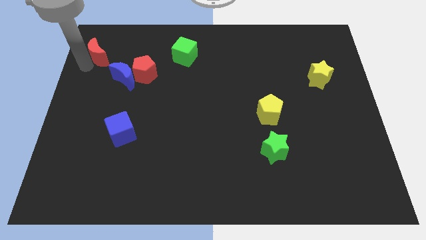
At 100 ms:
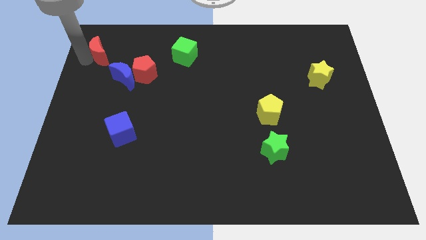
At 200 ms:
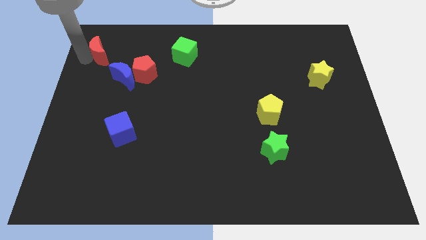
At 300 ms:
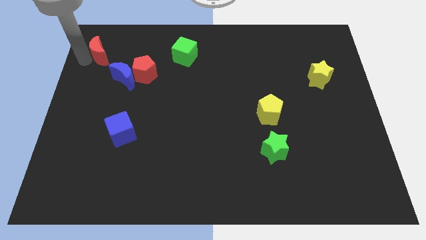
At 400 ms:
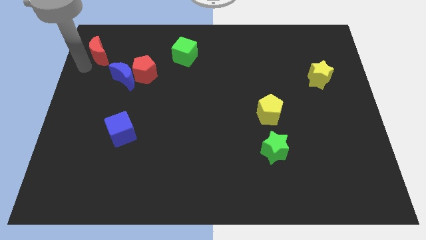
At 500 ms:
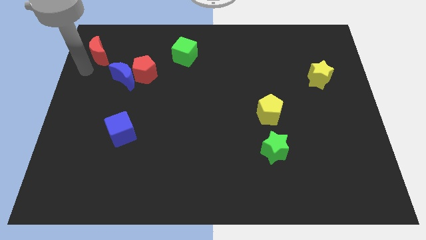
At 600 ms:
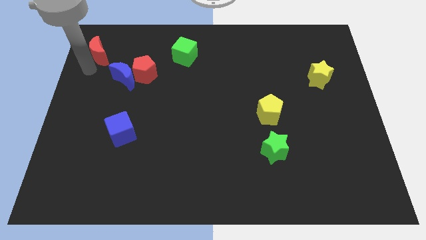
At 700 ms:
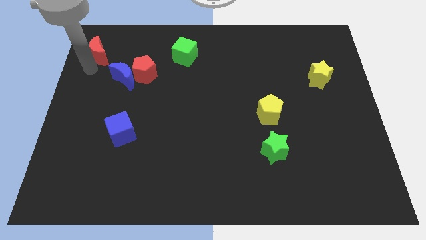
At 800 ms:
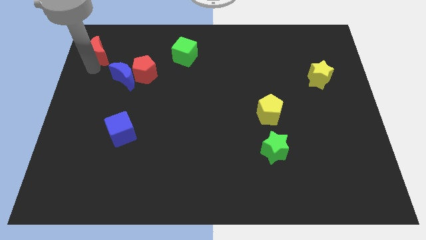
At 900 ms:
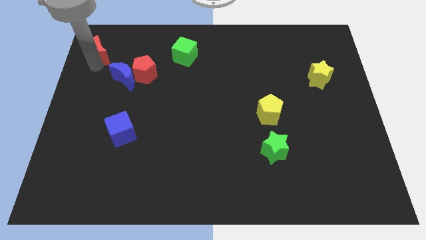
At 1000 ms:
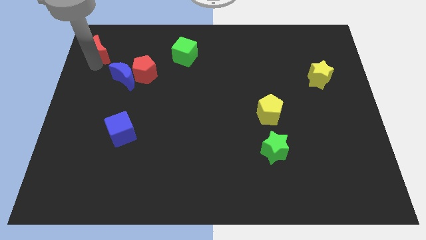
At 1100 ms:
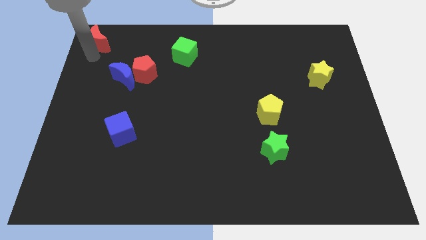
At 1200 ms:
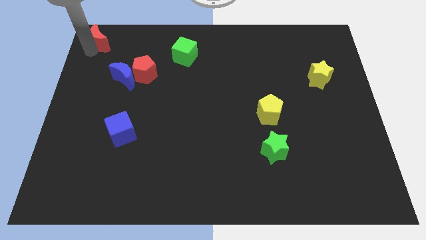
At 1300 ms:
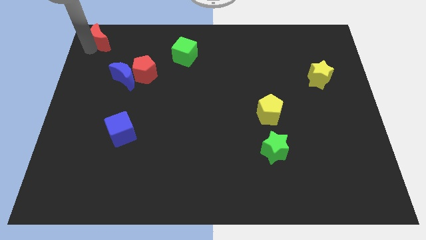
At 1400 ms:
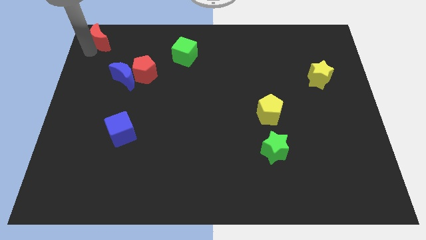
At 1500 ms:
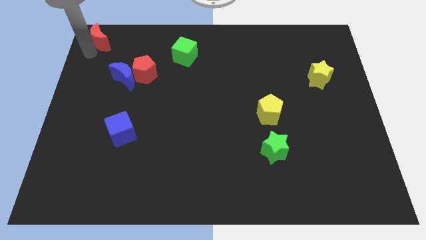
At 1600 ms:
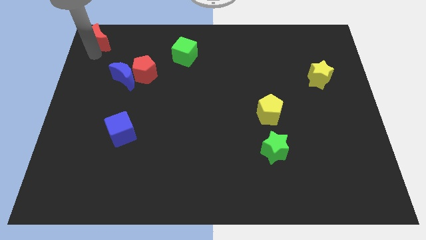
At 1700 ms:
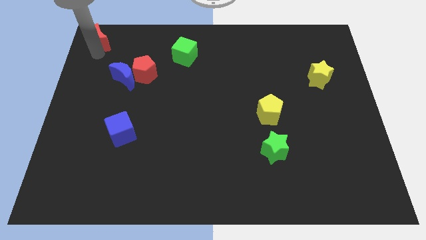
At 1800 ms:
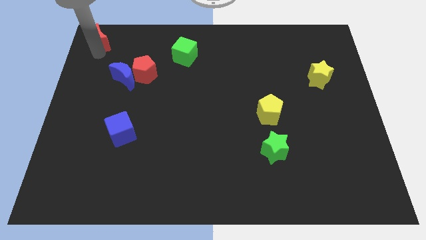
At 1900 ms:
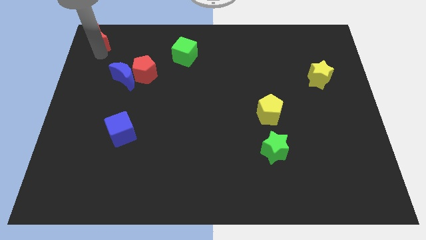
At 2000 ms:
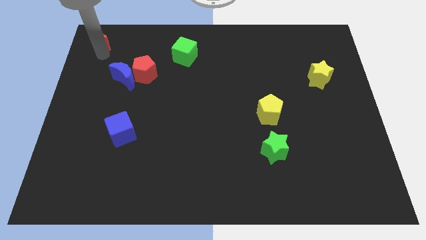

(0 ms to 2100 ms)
separate red crescent from blue moon

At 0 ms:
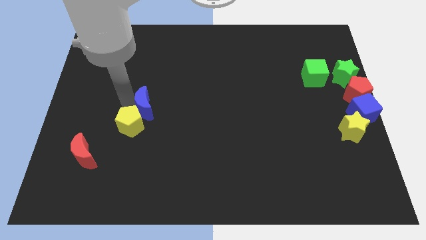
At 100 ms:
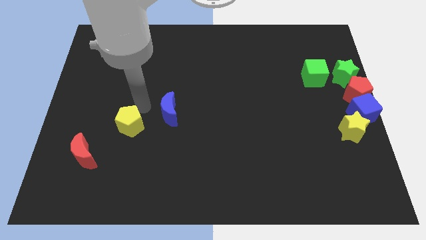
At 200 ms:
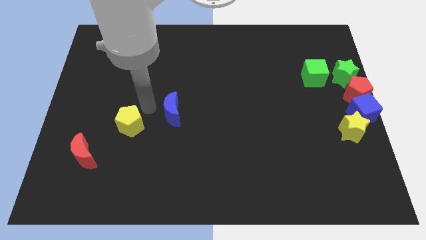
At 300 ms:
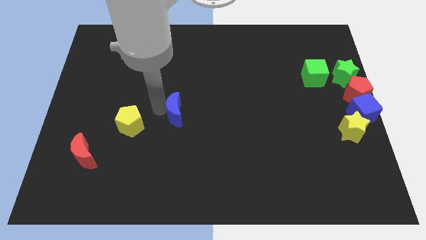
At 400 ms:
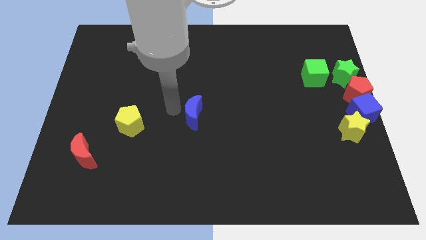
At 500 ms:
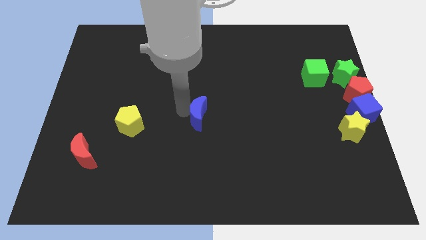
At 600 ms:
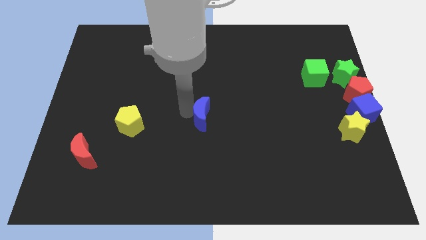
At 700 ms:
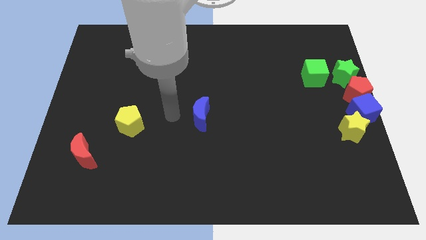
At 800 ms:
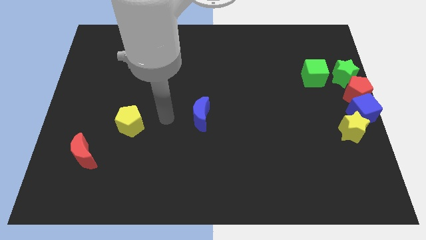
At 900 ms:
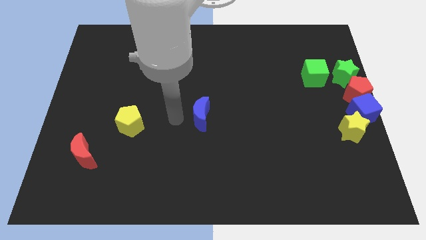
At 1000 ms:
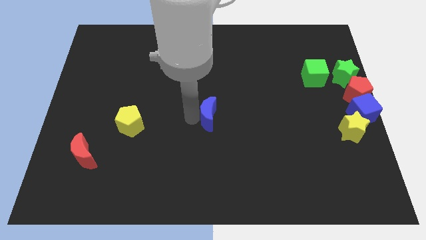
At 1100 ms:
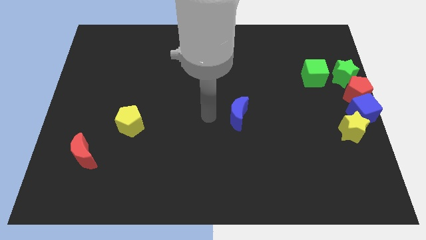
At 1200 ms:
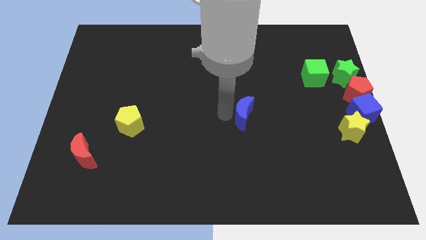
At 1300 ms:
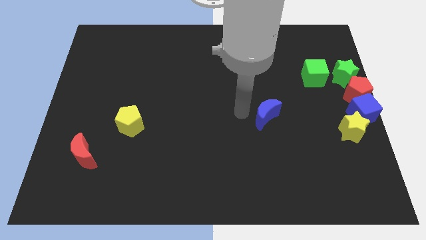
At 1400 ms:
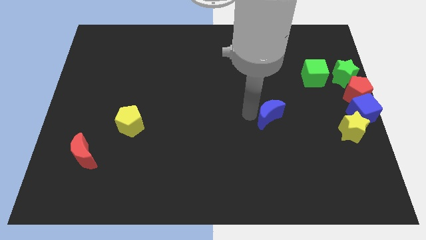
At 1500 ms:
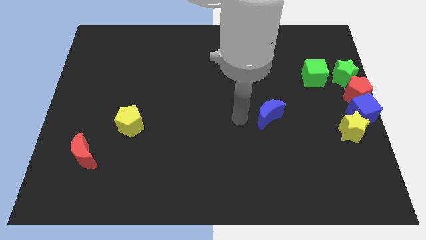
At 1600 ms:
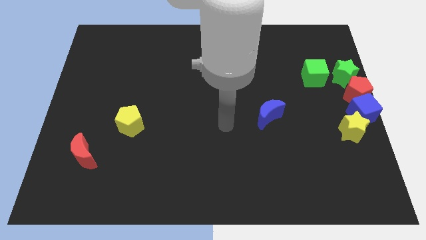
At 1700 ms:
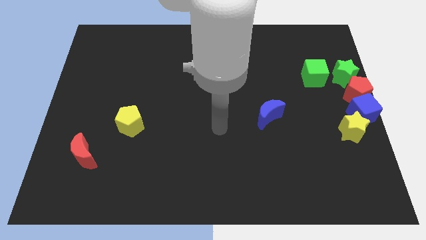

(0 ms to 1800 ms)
separate the blue moon from the yellow pentagon

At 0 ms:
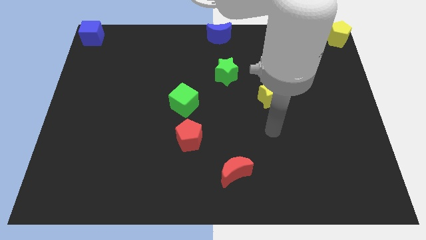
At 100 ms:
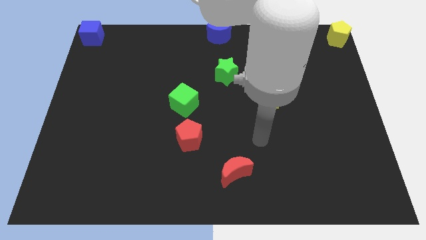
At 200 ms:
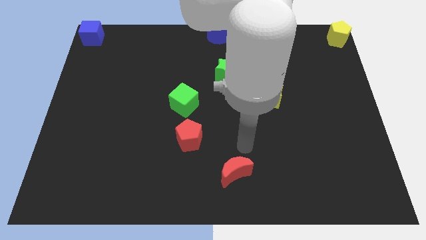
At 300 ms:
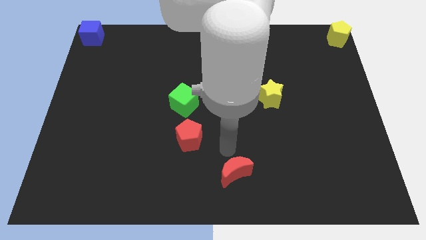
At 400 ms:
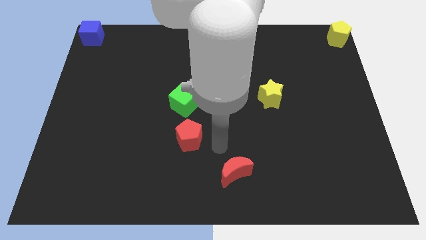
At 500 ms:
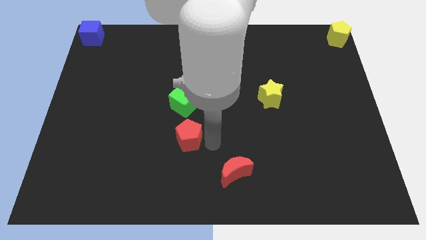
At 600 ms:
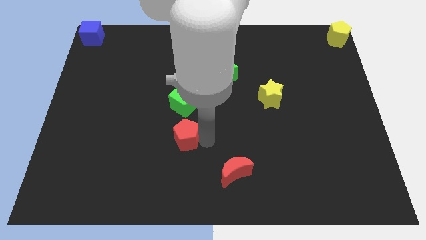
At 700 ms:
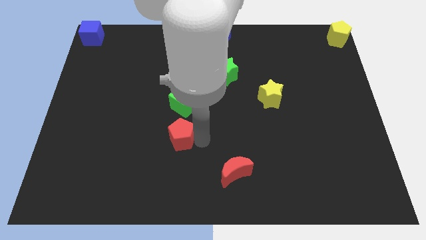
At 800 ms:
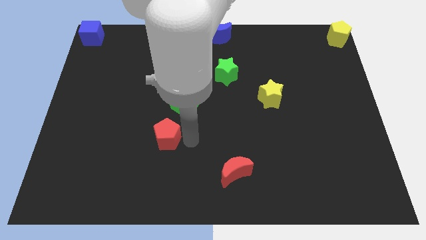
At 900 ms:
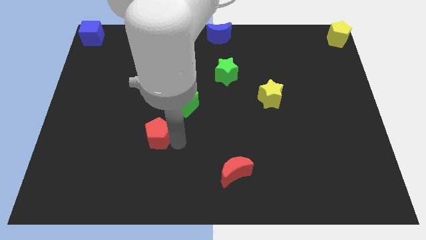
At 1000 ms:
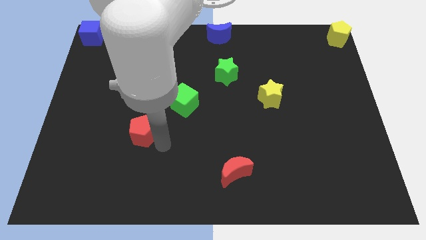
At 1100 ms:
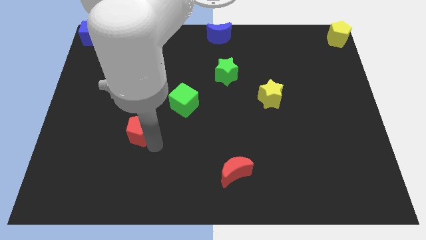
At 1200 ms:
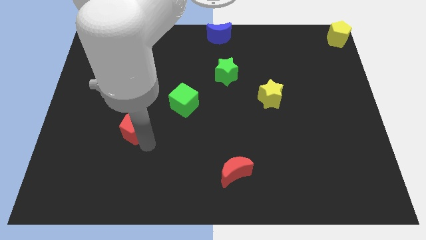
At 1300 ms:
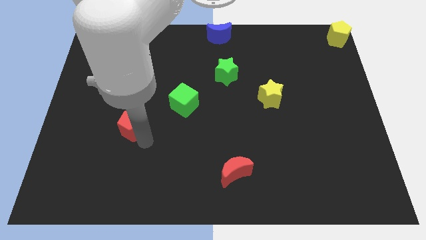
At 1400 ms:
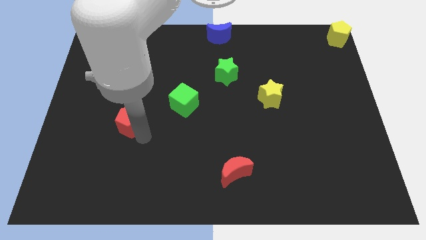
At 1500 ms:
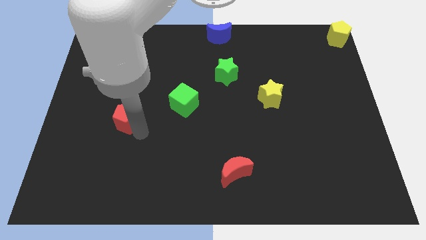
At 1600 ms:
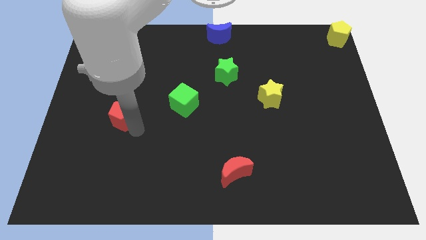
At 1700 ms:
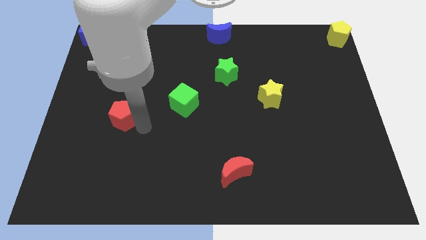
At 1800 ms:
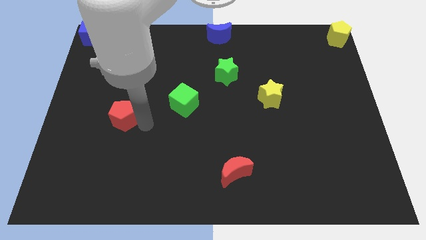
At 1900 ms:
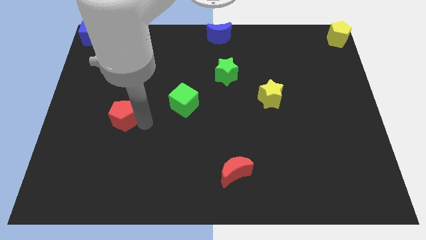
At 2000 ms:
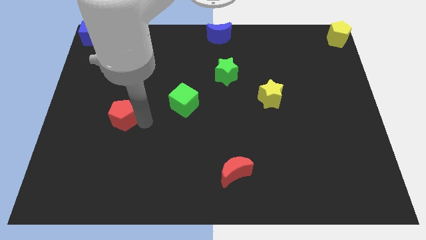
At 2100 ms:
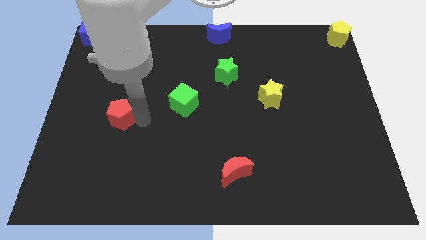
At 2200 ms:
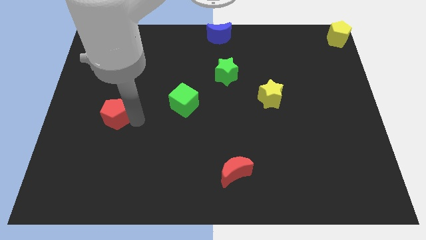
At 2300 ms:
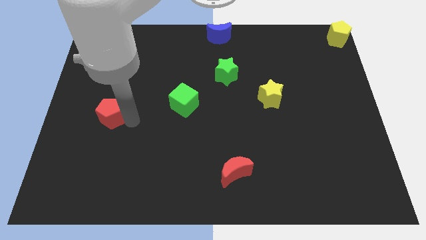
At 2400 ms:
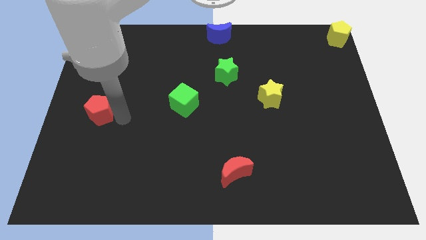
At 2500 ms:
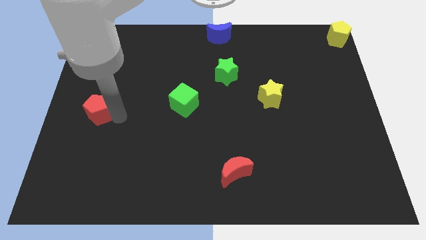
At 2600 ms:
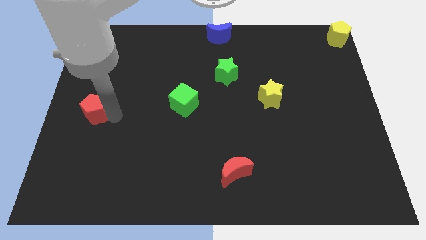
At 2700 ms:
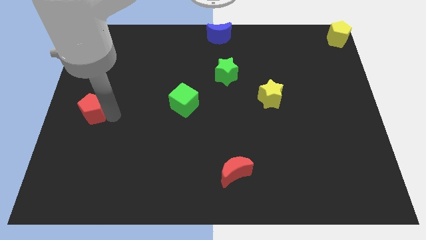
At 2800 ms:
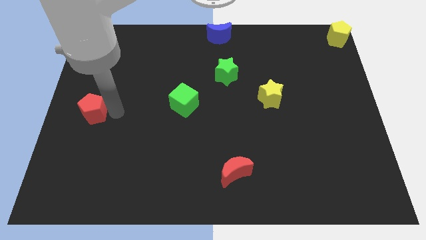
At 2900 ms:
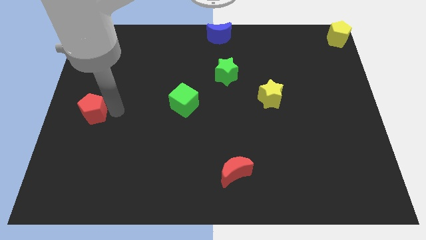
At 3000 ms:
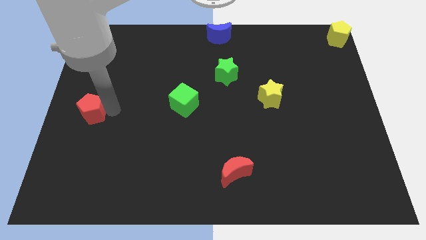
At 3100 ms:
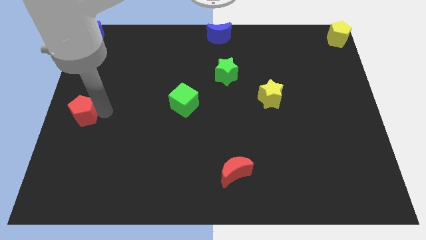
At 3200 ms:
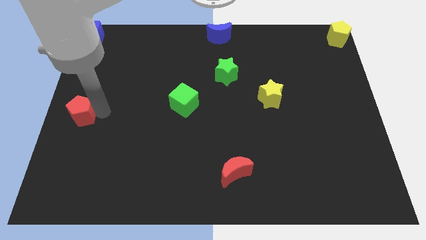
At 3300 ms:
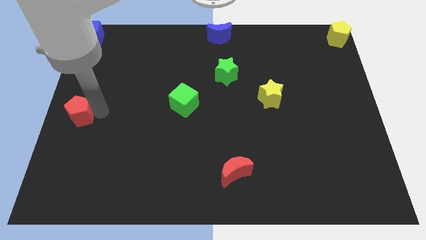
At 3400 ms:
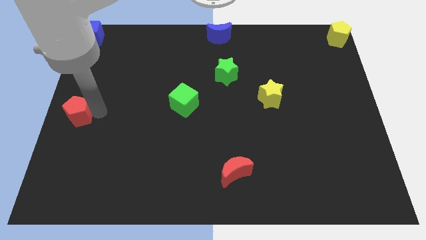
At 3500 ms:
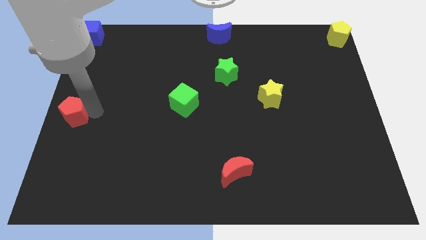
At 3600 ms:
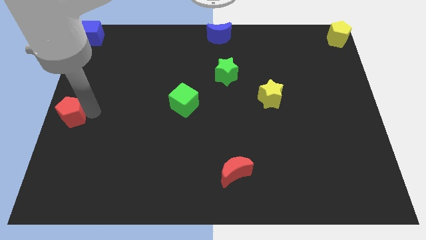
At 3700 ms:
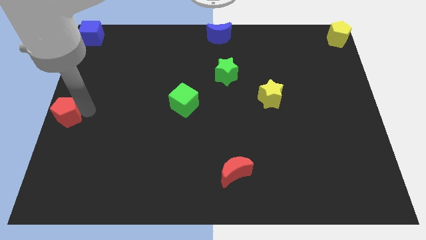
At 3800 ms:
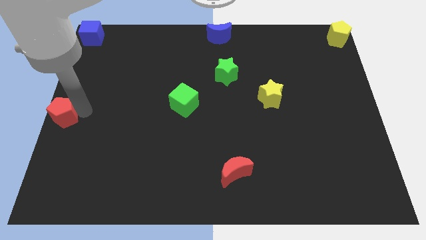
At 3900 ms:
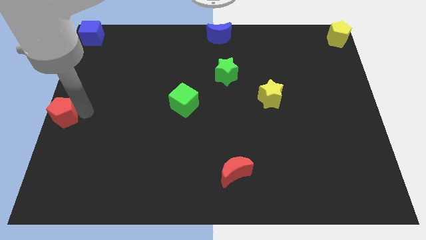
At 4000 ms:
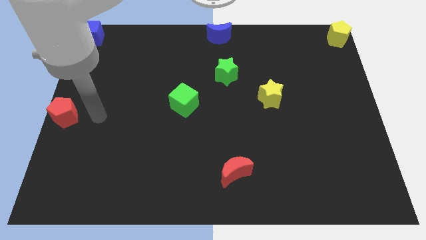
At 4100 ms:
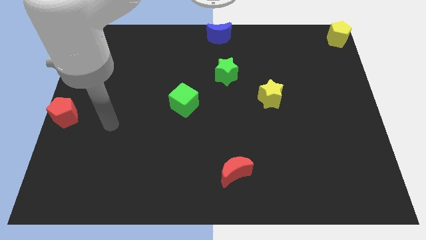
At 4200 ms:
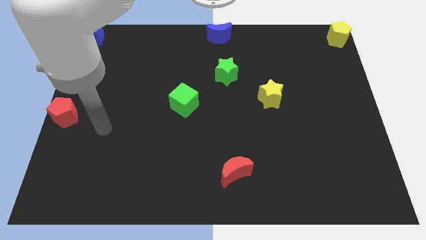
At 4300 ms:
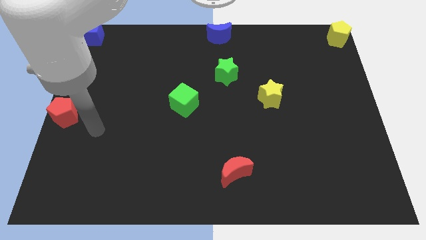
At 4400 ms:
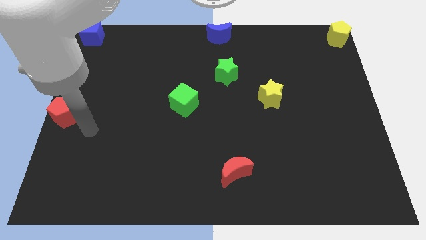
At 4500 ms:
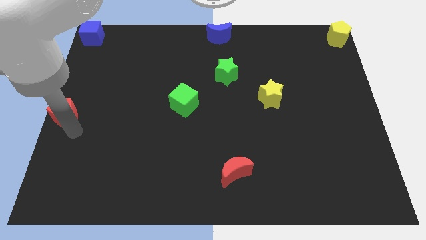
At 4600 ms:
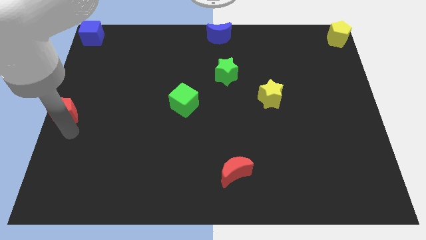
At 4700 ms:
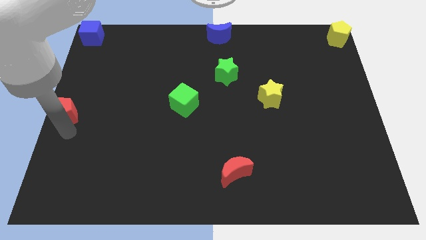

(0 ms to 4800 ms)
move the red pentagon towards the center left of the board

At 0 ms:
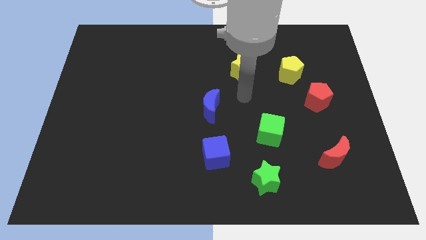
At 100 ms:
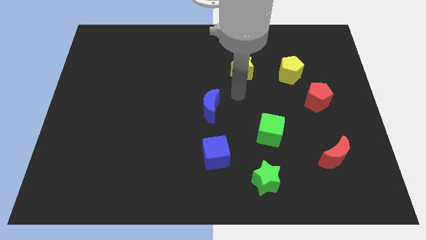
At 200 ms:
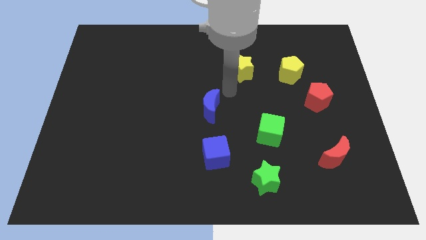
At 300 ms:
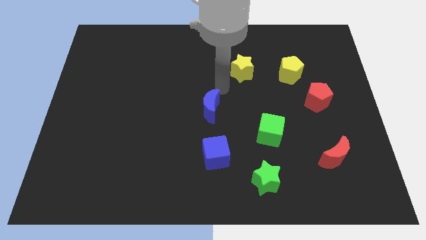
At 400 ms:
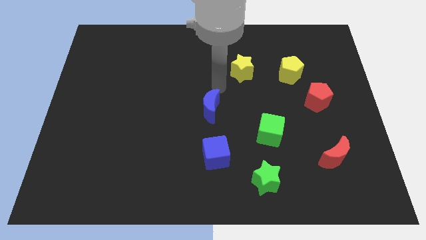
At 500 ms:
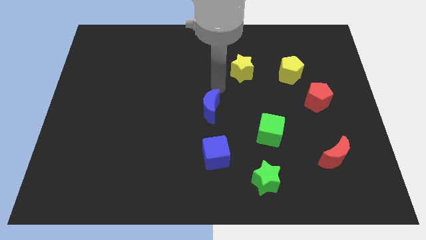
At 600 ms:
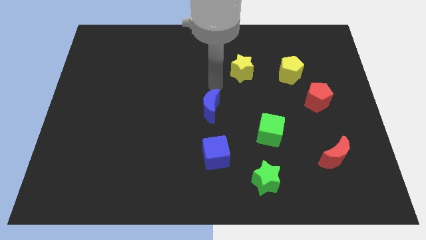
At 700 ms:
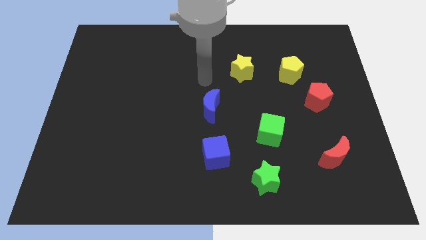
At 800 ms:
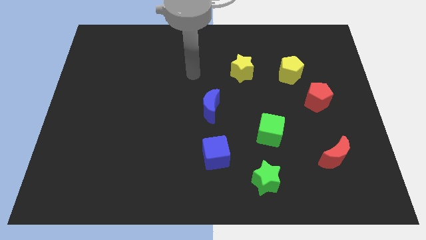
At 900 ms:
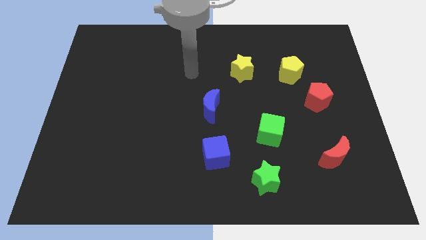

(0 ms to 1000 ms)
place your arm to the top left side of the blue moon
